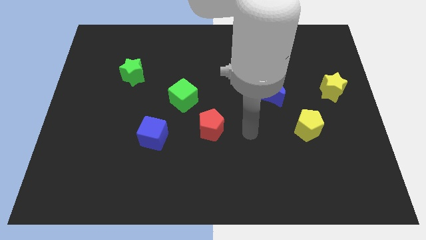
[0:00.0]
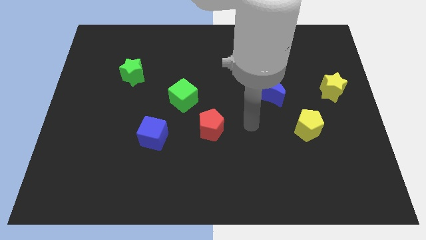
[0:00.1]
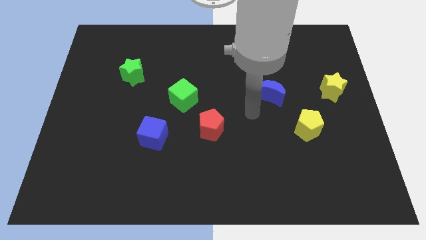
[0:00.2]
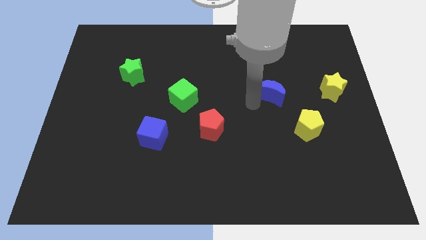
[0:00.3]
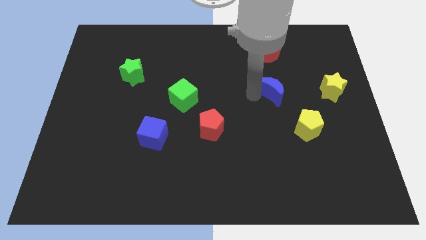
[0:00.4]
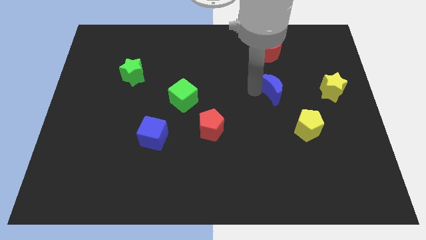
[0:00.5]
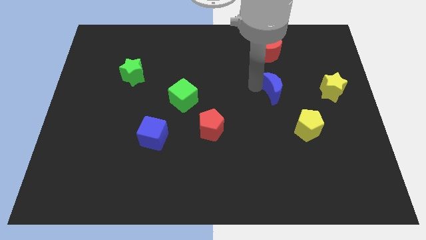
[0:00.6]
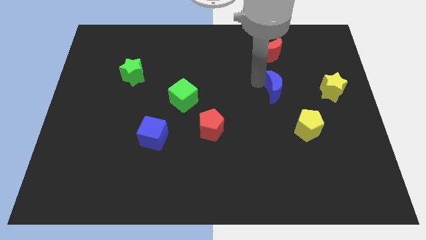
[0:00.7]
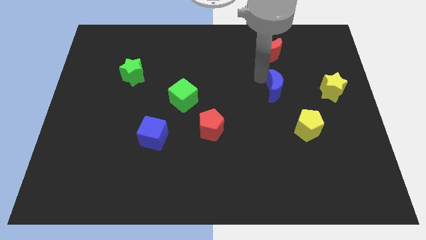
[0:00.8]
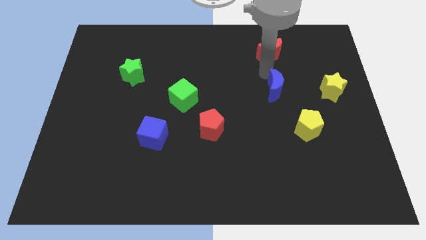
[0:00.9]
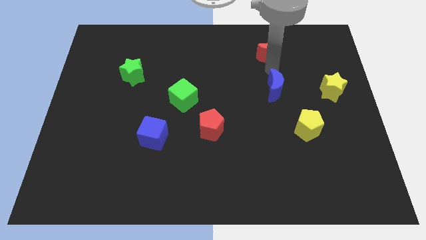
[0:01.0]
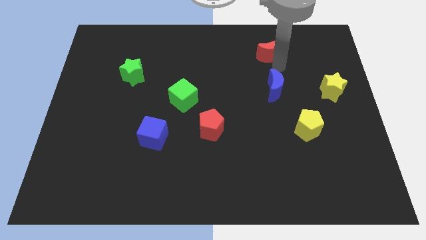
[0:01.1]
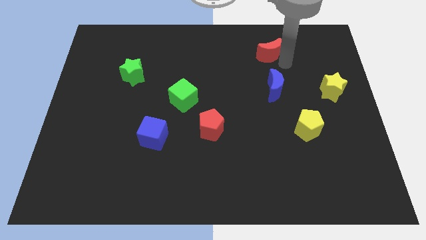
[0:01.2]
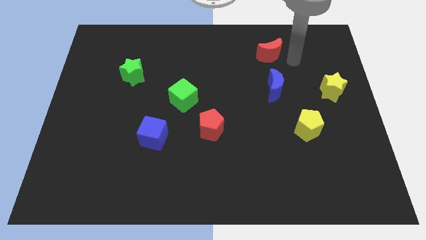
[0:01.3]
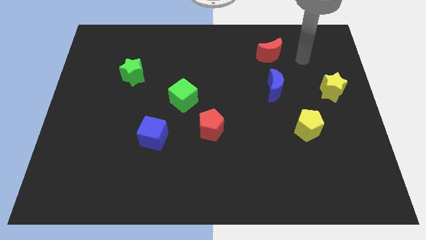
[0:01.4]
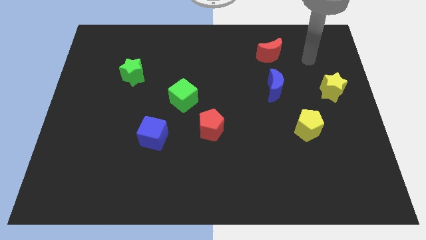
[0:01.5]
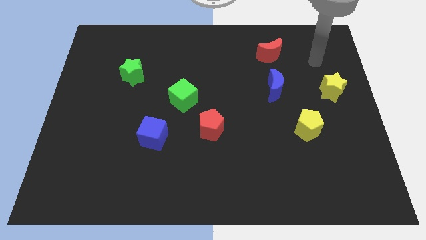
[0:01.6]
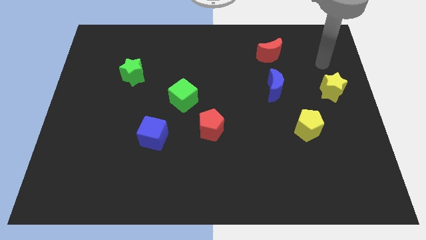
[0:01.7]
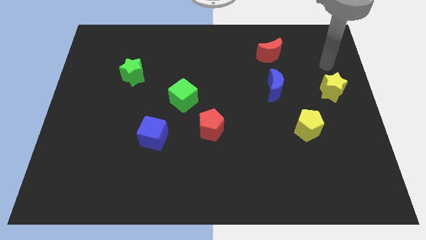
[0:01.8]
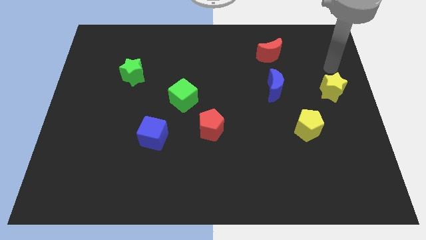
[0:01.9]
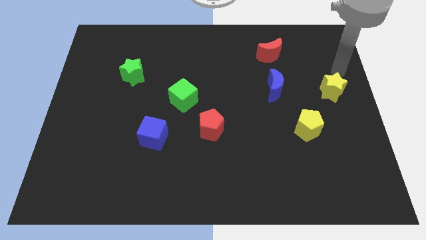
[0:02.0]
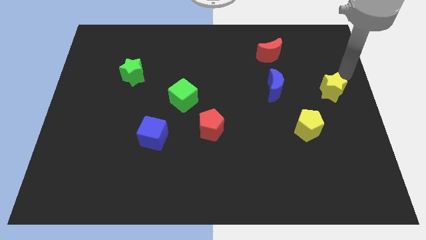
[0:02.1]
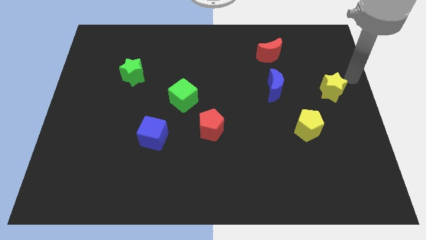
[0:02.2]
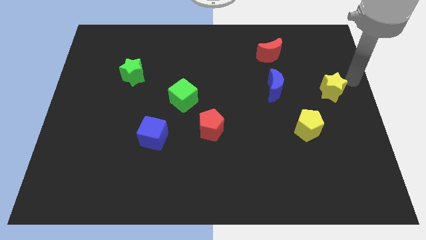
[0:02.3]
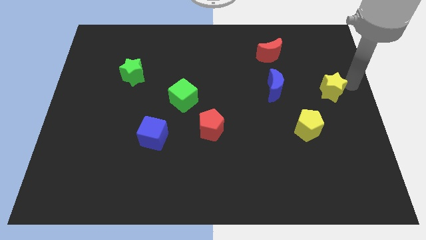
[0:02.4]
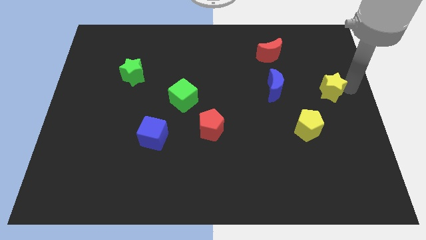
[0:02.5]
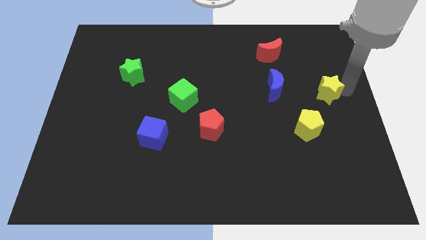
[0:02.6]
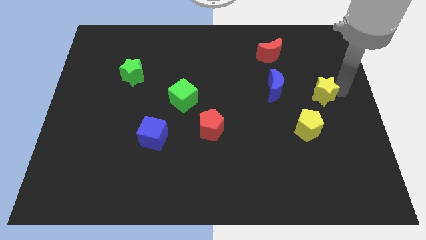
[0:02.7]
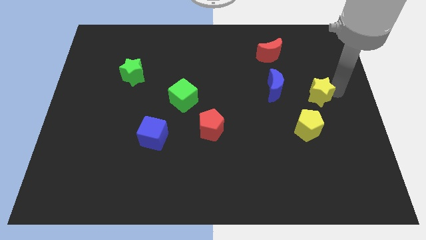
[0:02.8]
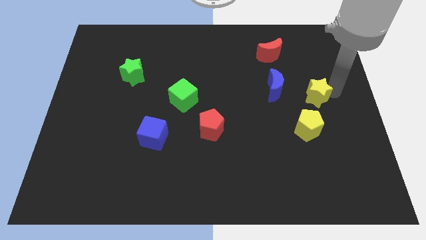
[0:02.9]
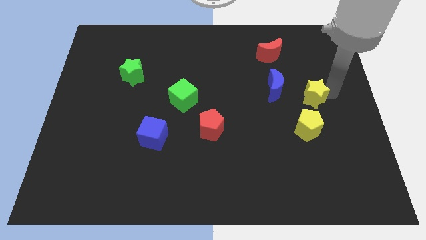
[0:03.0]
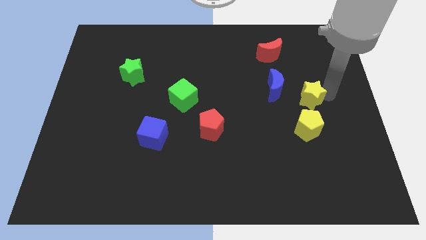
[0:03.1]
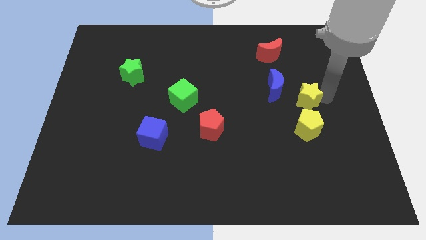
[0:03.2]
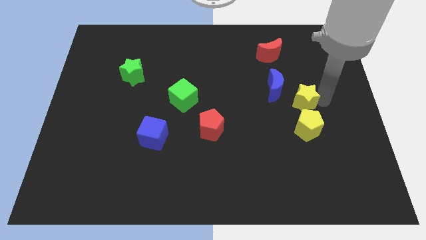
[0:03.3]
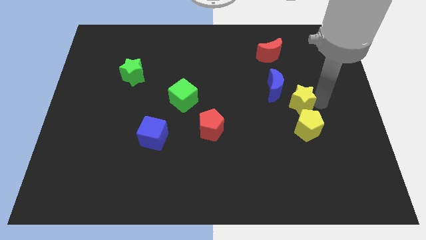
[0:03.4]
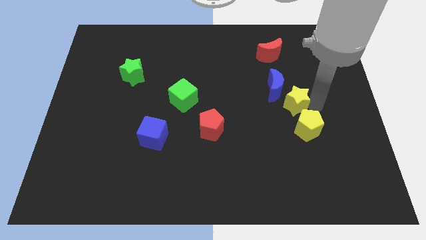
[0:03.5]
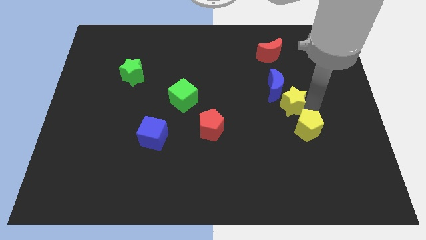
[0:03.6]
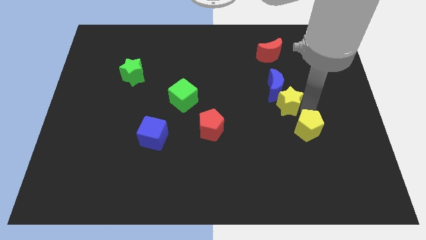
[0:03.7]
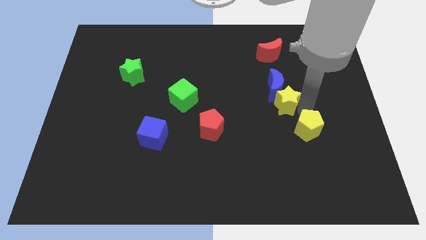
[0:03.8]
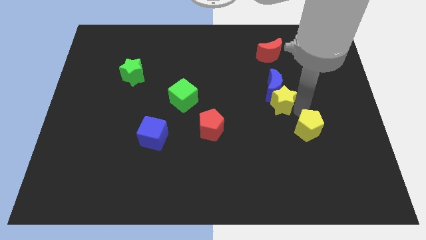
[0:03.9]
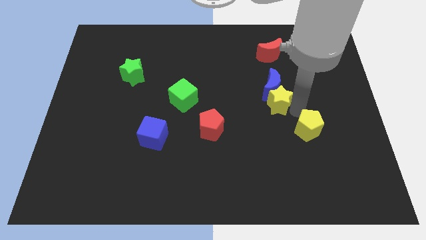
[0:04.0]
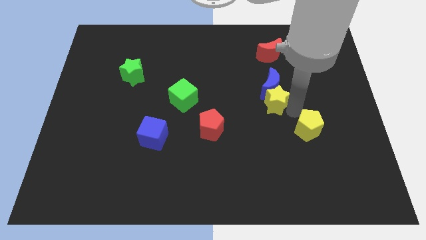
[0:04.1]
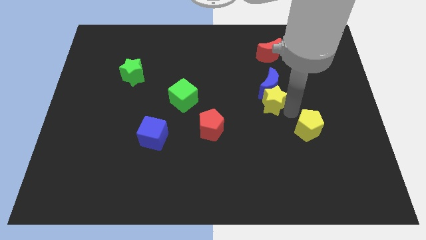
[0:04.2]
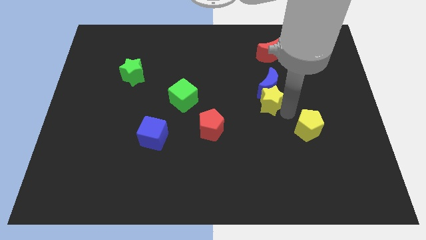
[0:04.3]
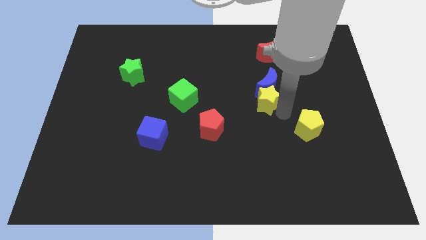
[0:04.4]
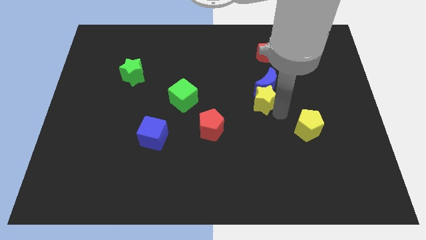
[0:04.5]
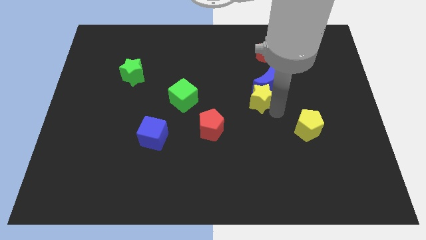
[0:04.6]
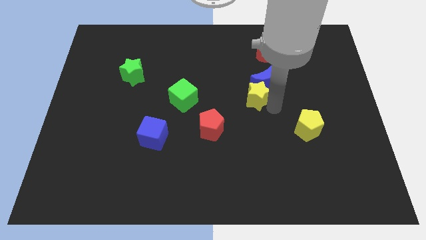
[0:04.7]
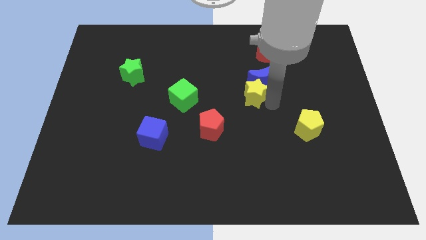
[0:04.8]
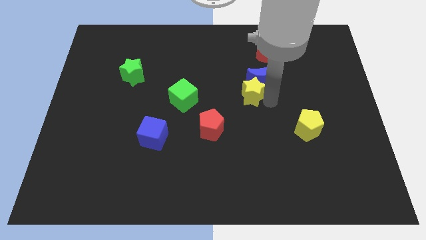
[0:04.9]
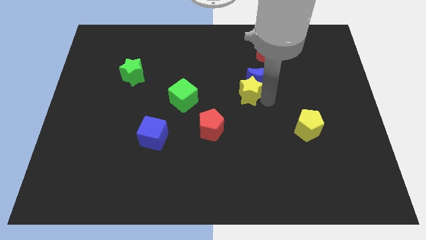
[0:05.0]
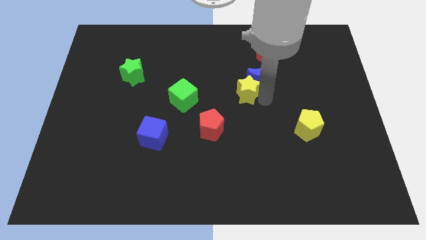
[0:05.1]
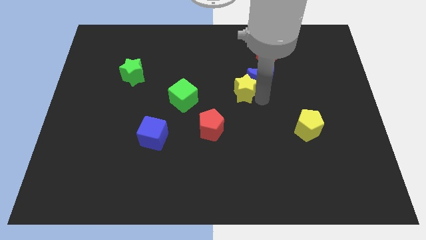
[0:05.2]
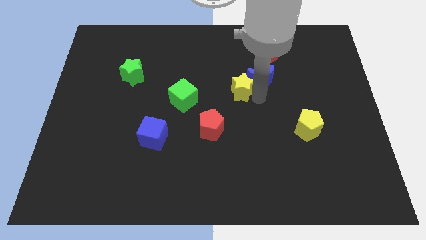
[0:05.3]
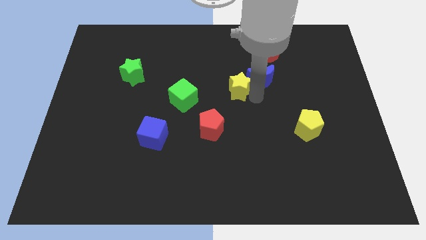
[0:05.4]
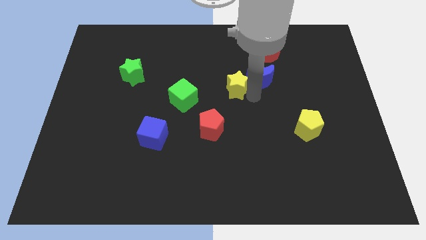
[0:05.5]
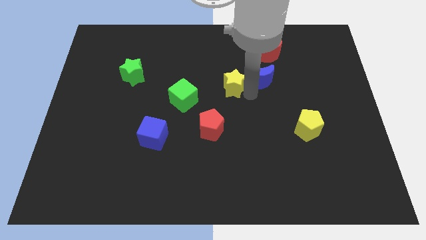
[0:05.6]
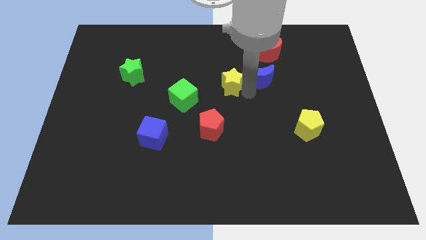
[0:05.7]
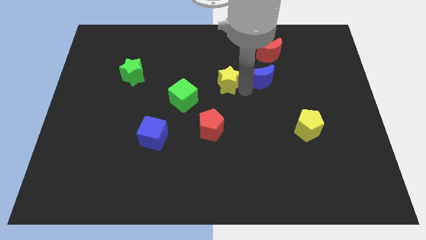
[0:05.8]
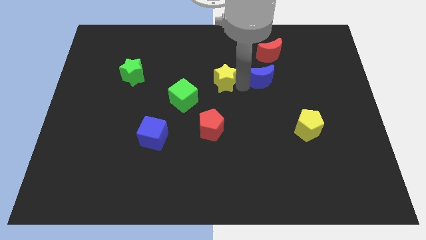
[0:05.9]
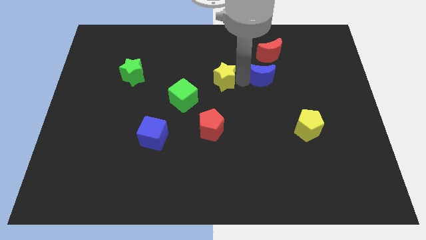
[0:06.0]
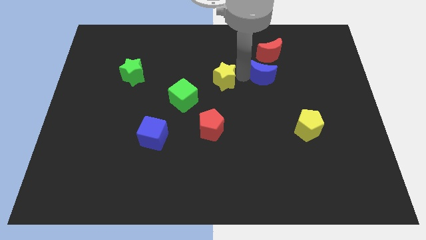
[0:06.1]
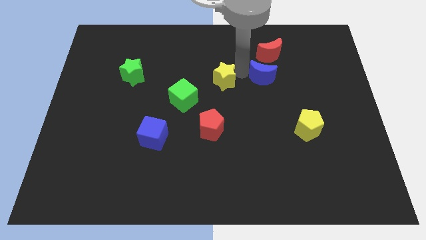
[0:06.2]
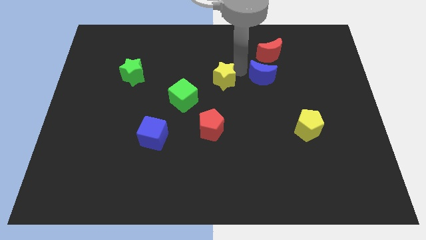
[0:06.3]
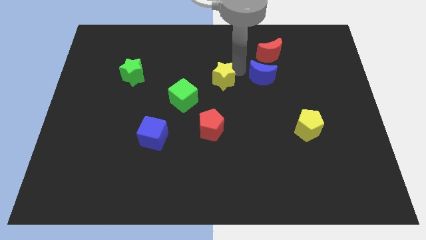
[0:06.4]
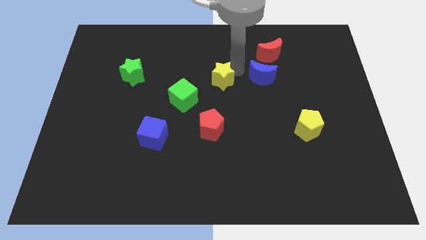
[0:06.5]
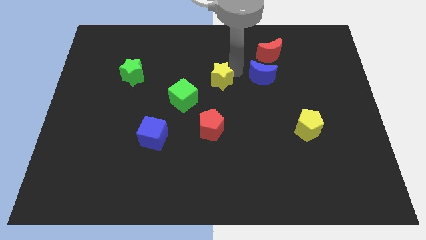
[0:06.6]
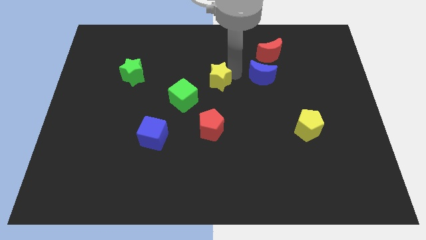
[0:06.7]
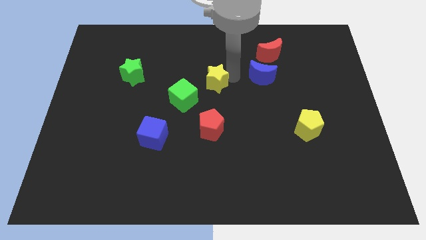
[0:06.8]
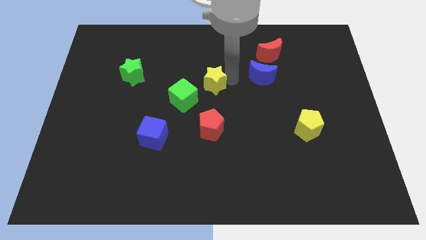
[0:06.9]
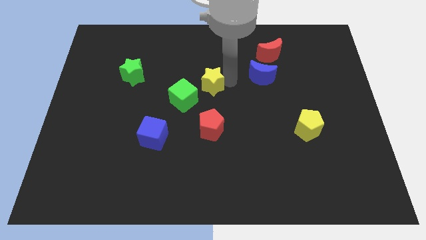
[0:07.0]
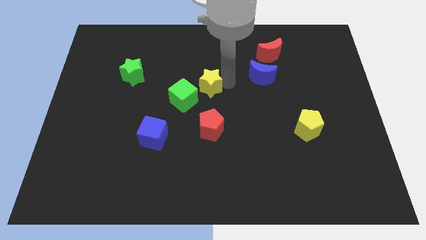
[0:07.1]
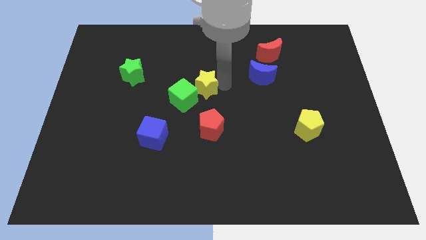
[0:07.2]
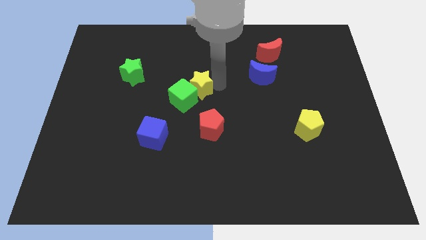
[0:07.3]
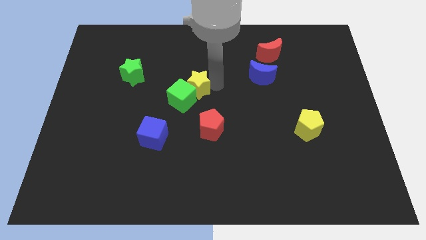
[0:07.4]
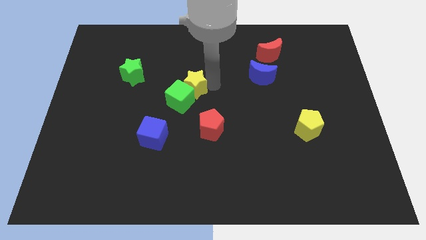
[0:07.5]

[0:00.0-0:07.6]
slide the yellow star towards the green cube

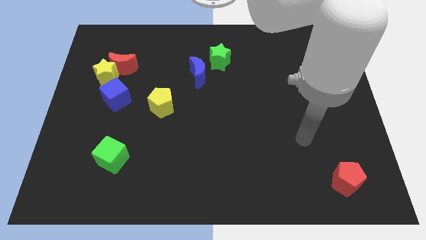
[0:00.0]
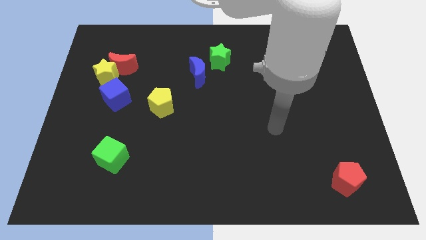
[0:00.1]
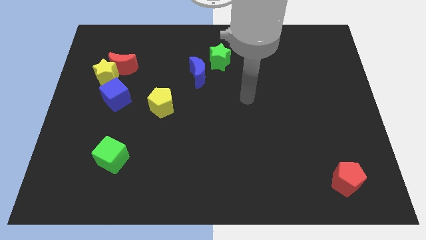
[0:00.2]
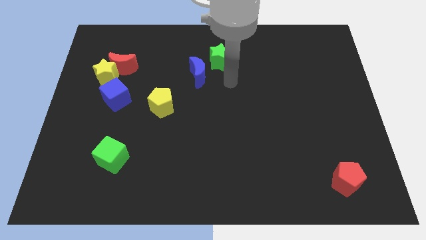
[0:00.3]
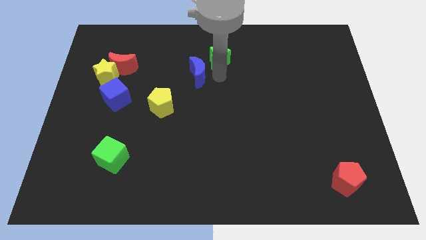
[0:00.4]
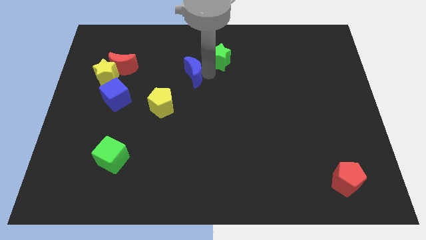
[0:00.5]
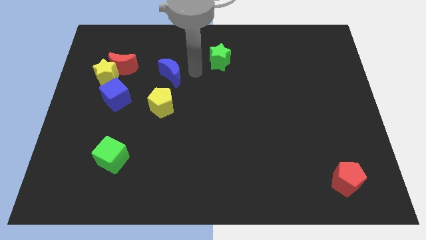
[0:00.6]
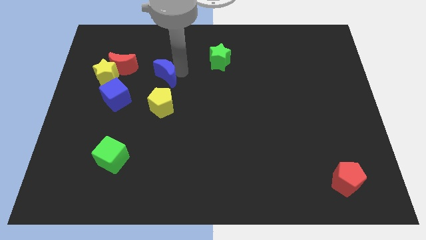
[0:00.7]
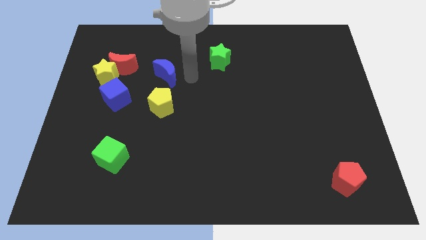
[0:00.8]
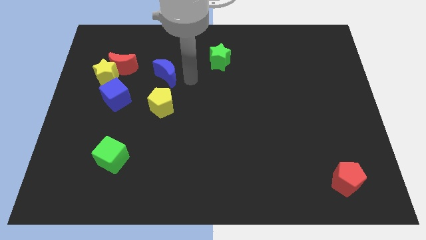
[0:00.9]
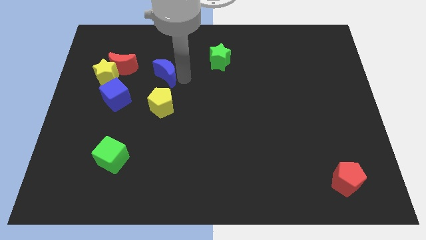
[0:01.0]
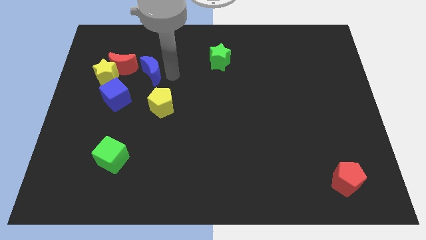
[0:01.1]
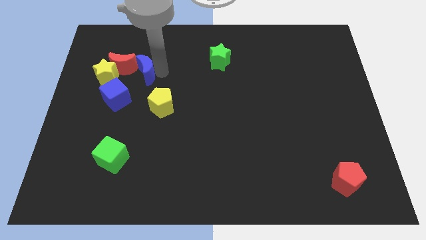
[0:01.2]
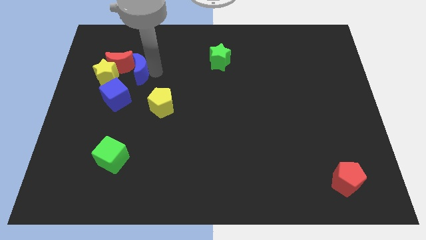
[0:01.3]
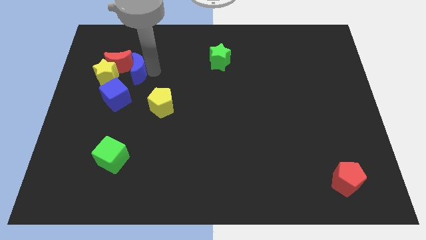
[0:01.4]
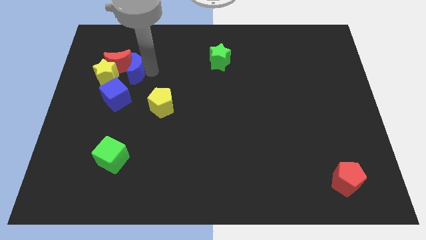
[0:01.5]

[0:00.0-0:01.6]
move the blue moon to the red moon
